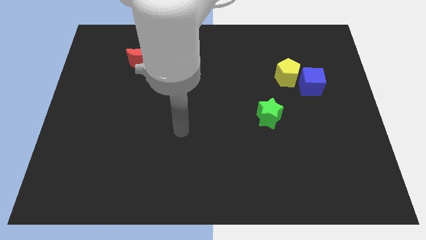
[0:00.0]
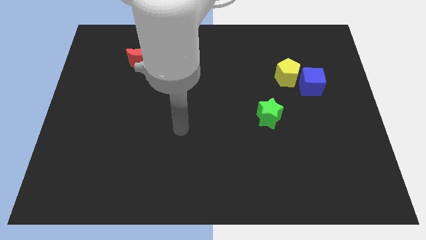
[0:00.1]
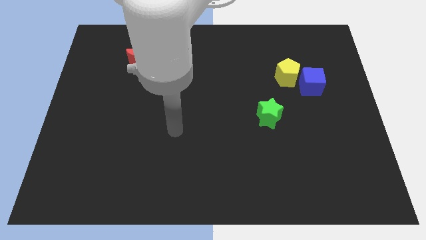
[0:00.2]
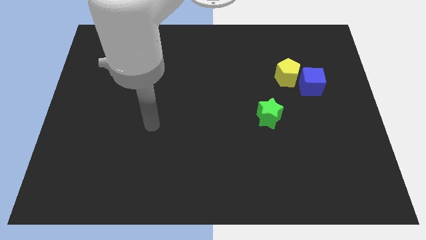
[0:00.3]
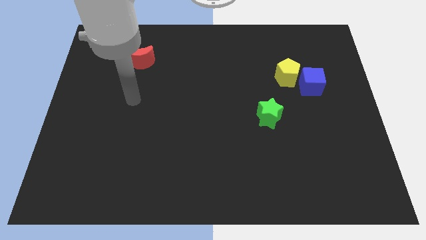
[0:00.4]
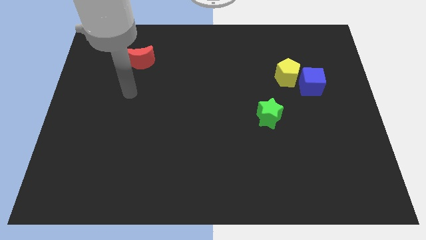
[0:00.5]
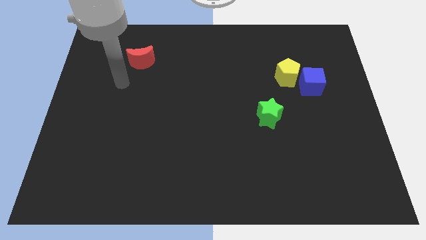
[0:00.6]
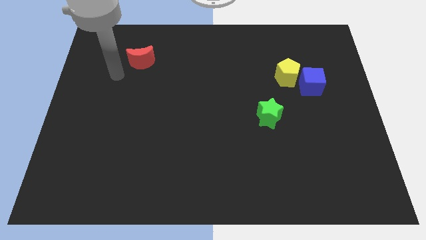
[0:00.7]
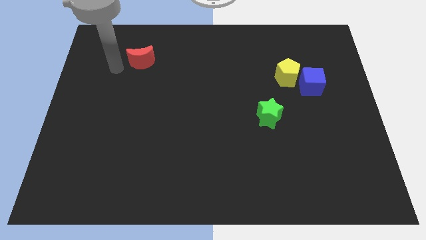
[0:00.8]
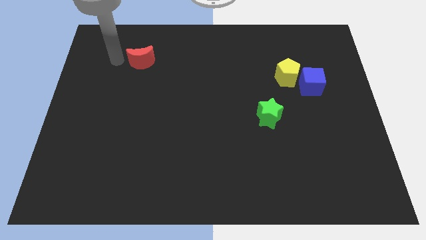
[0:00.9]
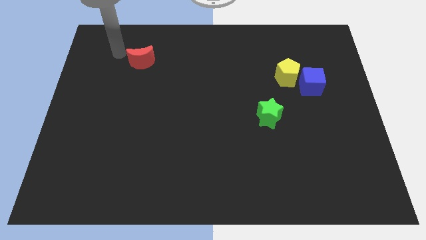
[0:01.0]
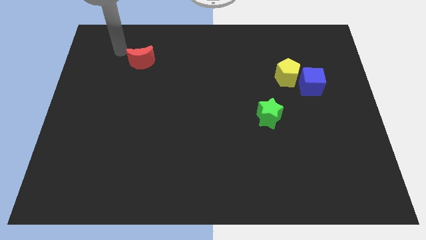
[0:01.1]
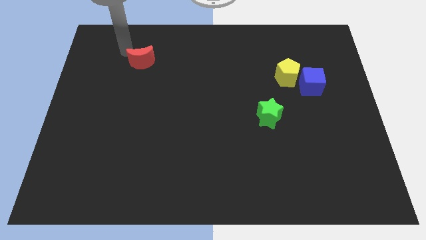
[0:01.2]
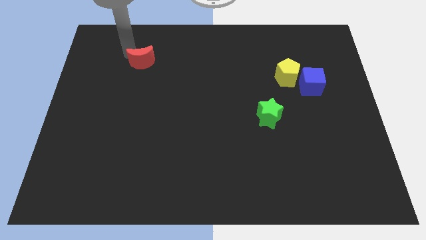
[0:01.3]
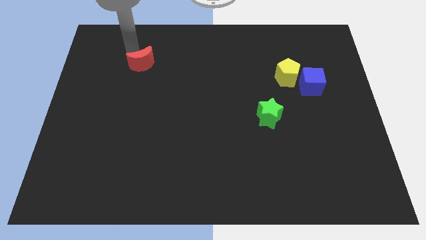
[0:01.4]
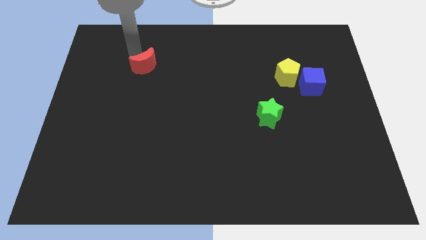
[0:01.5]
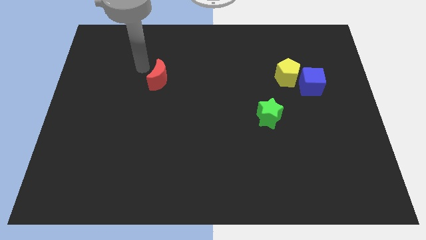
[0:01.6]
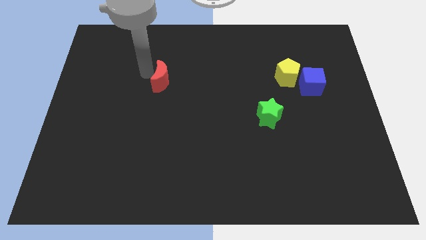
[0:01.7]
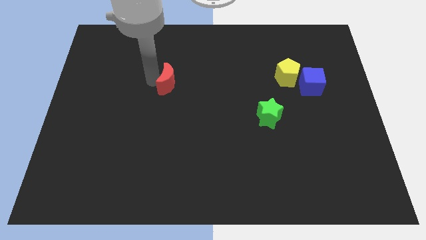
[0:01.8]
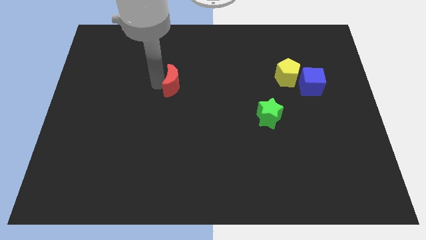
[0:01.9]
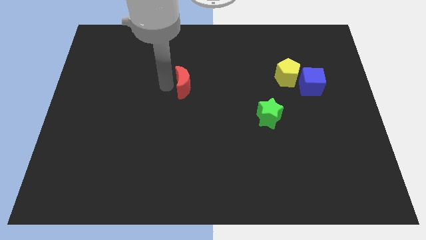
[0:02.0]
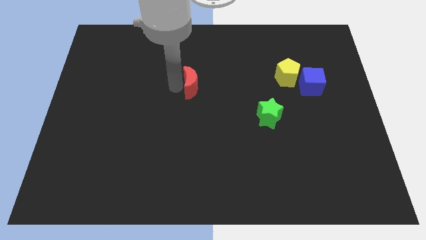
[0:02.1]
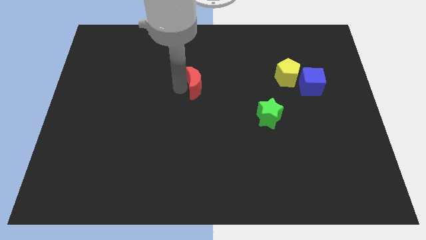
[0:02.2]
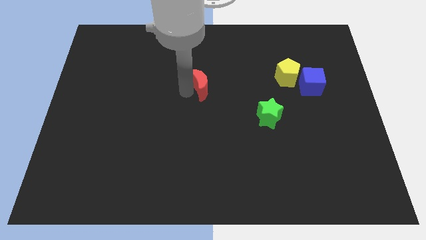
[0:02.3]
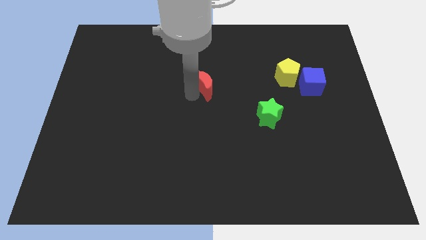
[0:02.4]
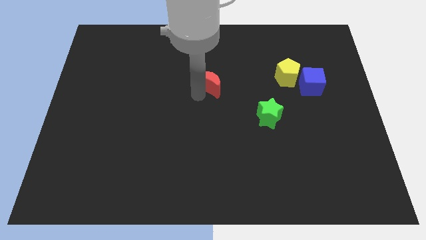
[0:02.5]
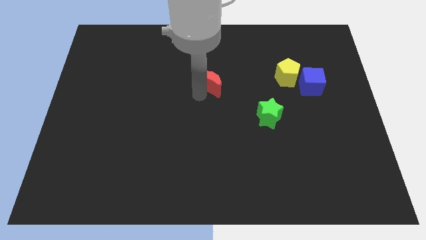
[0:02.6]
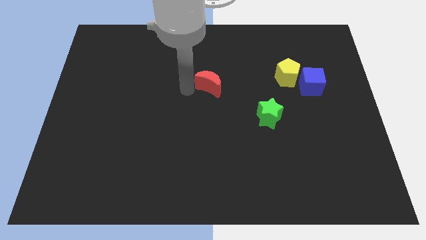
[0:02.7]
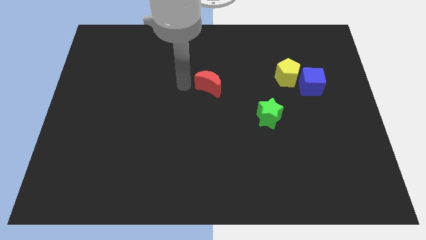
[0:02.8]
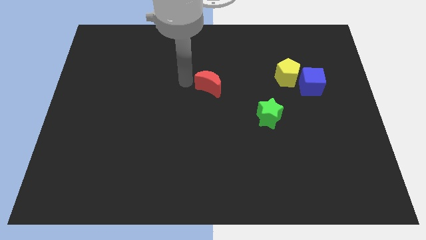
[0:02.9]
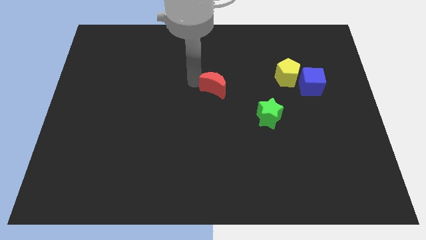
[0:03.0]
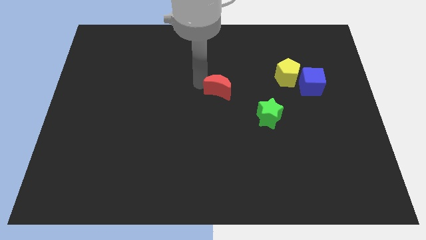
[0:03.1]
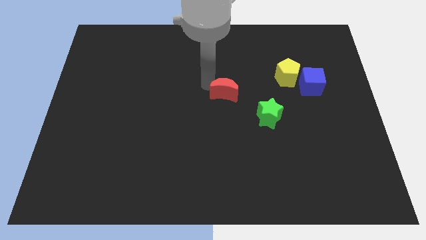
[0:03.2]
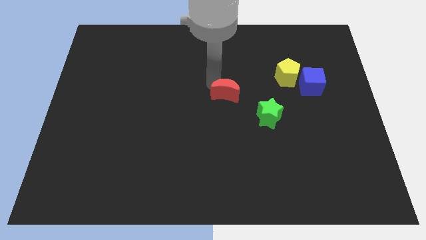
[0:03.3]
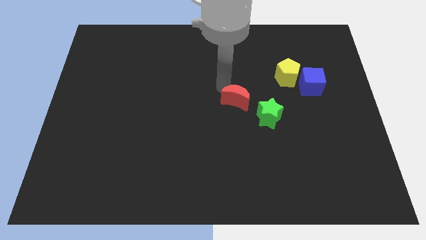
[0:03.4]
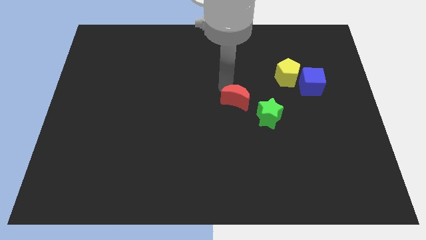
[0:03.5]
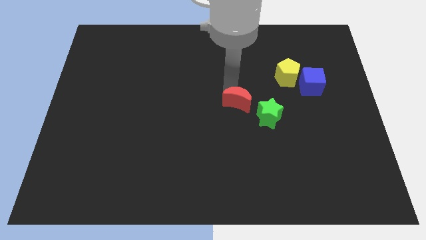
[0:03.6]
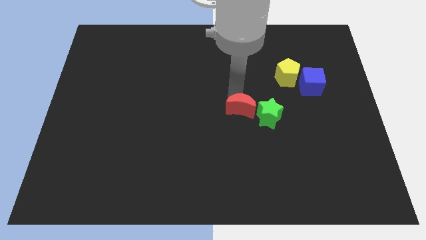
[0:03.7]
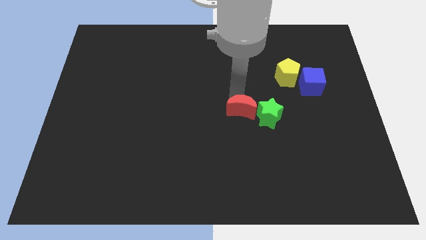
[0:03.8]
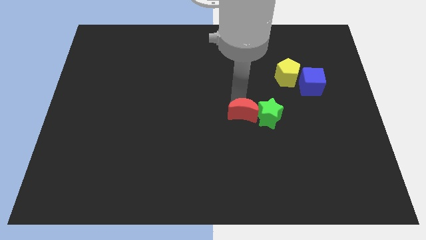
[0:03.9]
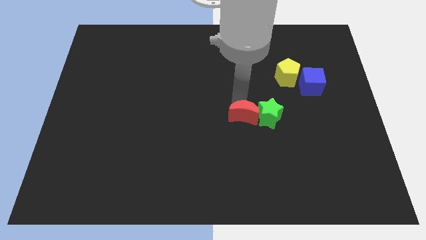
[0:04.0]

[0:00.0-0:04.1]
push the red block towards the green block

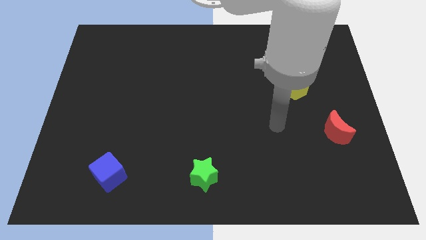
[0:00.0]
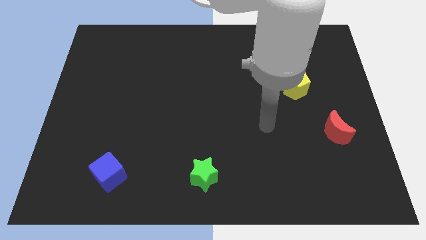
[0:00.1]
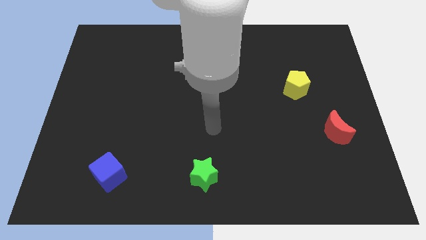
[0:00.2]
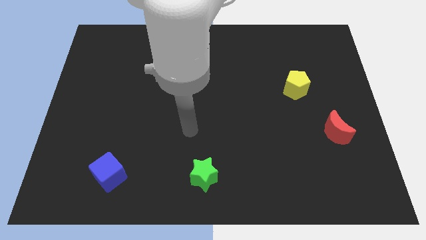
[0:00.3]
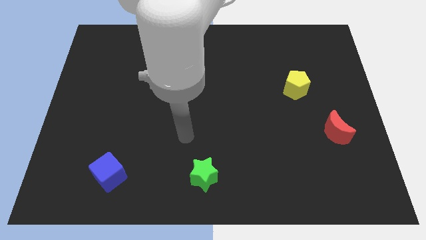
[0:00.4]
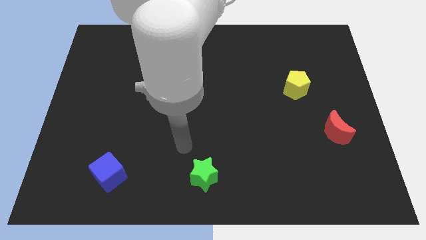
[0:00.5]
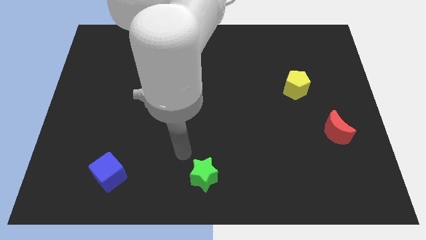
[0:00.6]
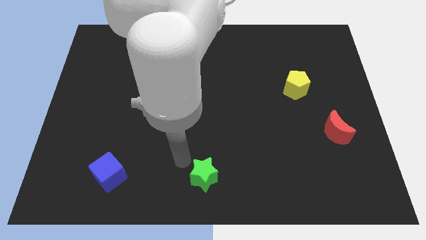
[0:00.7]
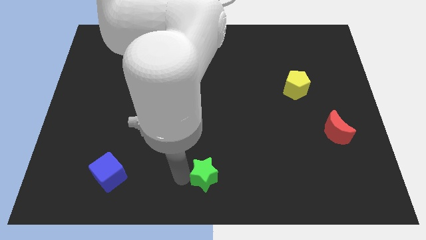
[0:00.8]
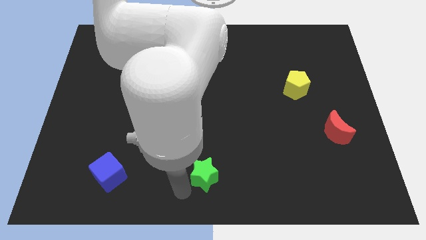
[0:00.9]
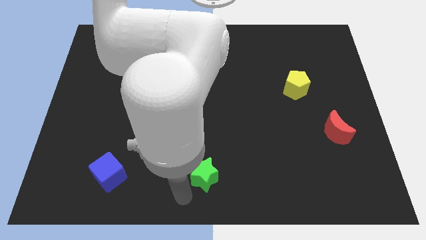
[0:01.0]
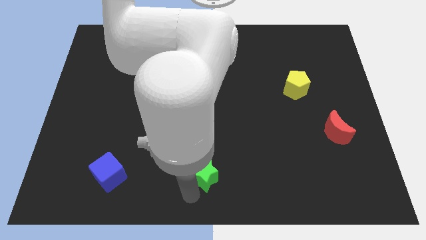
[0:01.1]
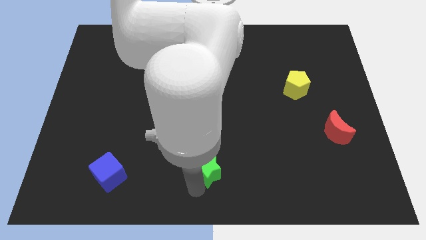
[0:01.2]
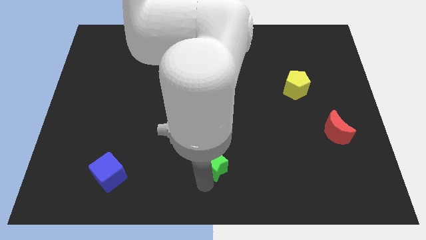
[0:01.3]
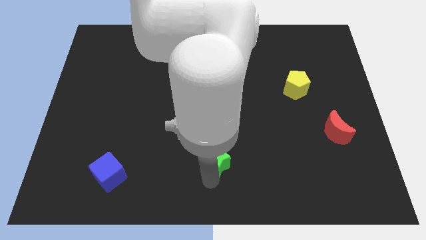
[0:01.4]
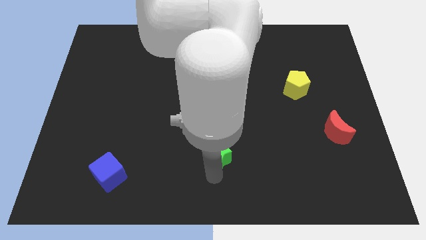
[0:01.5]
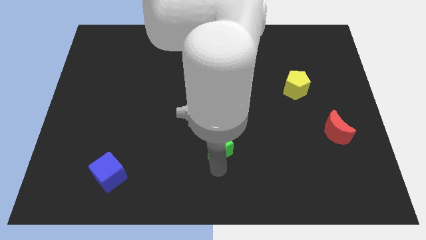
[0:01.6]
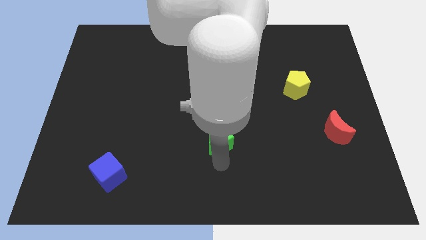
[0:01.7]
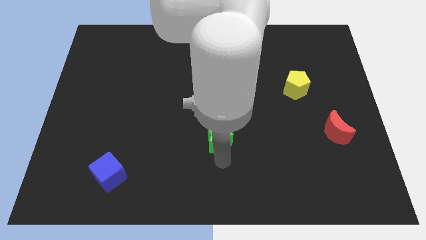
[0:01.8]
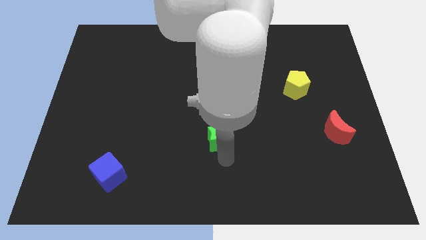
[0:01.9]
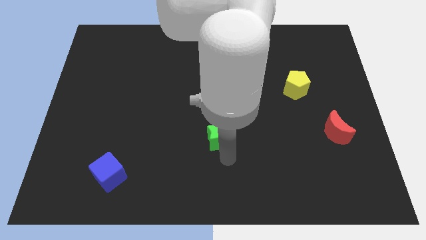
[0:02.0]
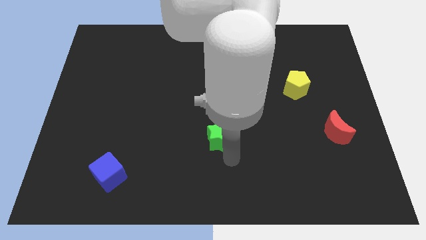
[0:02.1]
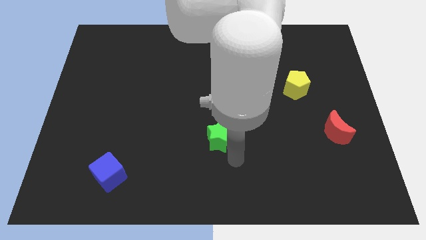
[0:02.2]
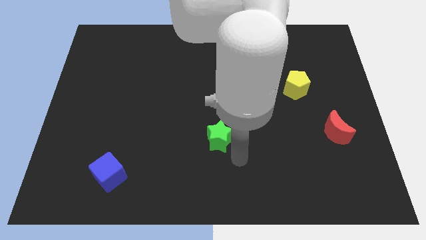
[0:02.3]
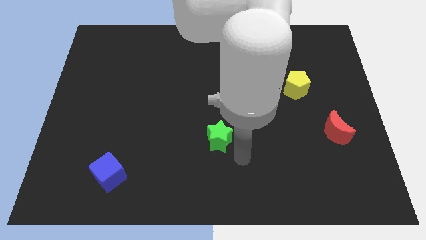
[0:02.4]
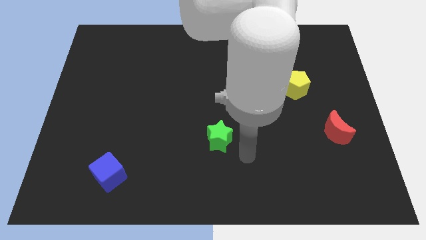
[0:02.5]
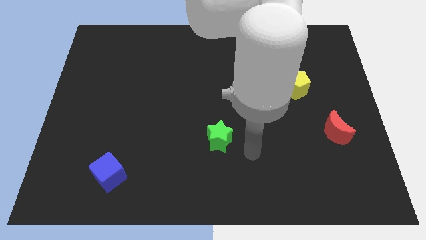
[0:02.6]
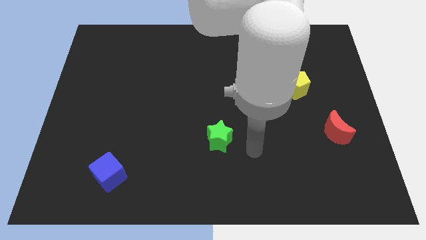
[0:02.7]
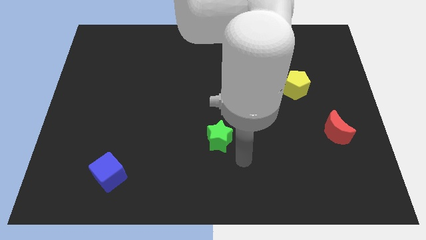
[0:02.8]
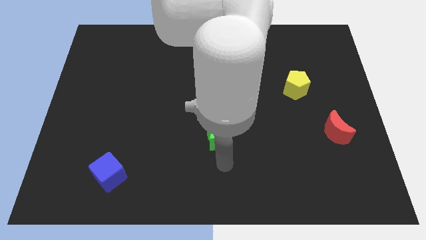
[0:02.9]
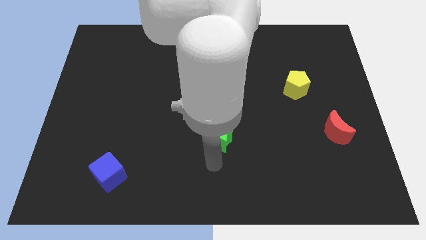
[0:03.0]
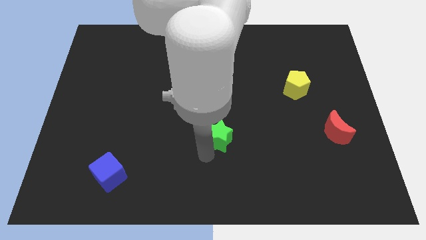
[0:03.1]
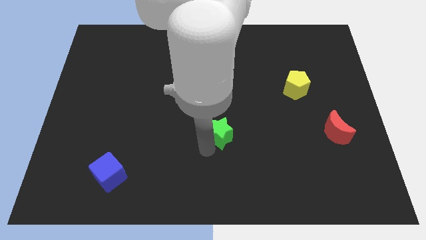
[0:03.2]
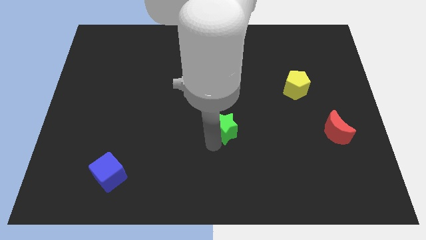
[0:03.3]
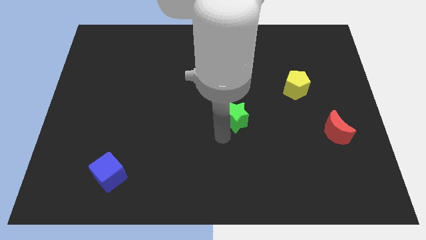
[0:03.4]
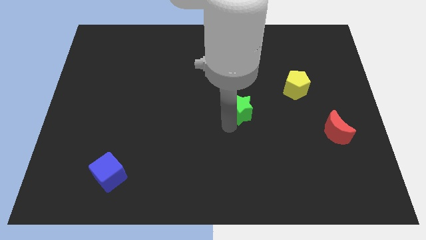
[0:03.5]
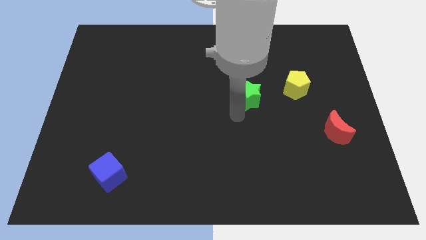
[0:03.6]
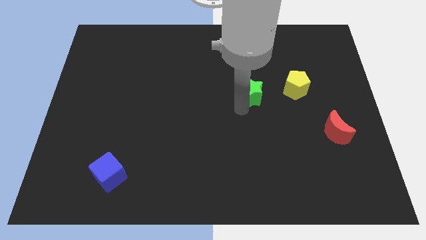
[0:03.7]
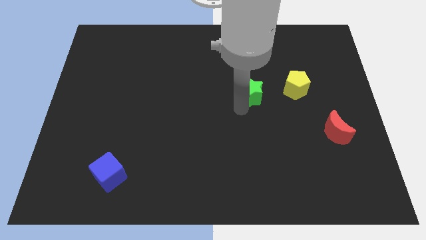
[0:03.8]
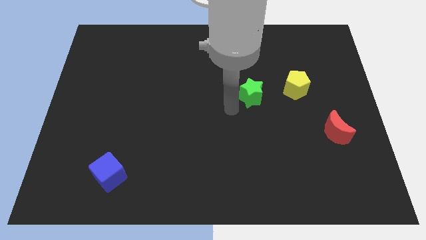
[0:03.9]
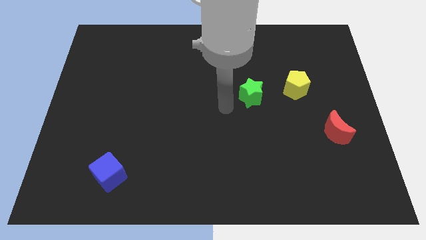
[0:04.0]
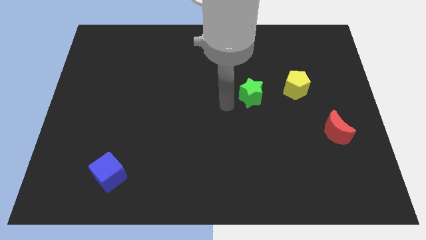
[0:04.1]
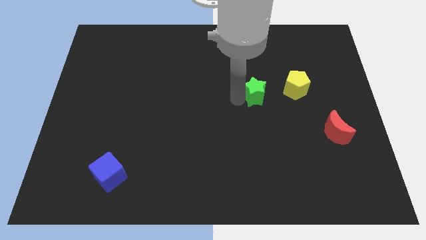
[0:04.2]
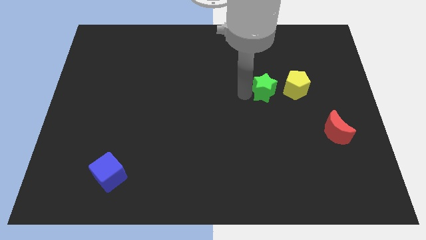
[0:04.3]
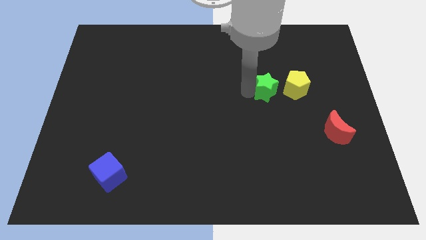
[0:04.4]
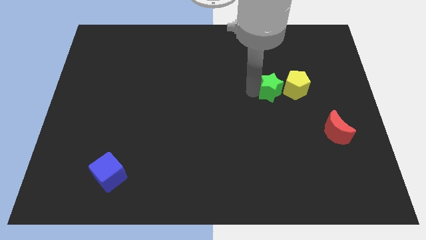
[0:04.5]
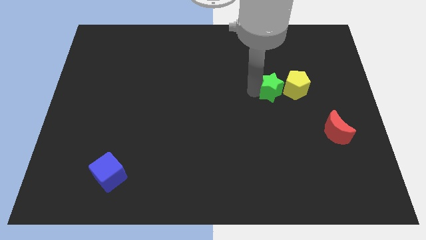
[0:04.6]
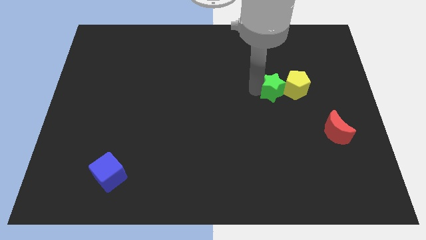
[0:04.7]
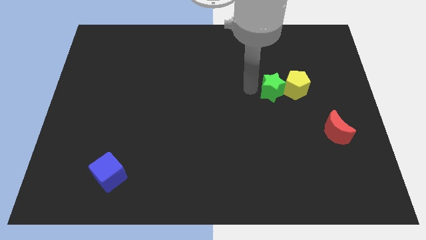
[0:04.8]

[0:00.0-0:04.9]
move the green star to the pentagon
